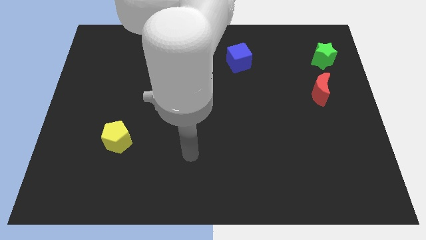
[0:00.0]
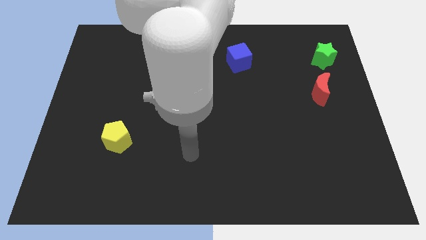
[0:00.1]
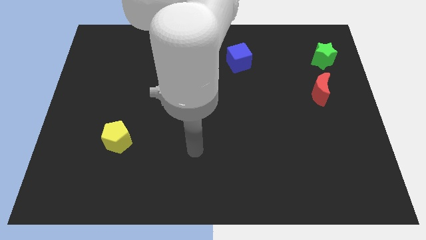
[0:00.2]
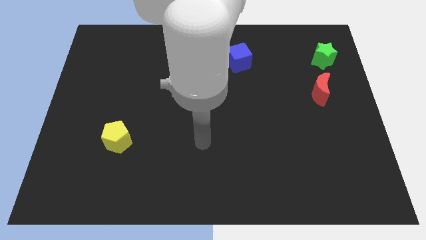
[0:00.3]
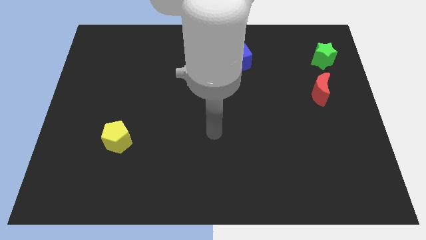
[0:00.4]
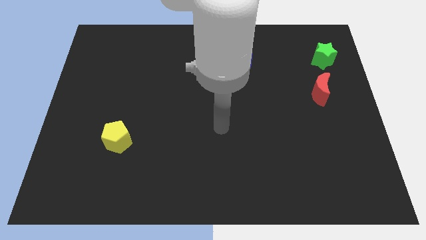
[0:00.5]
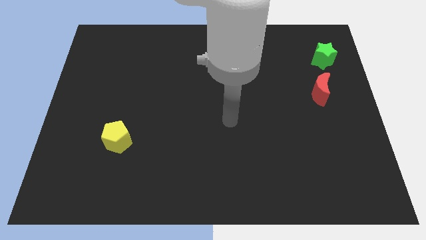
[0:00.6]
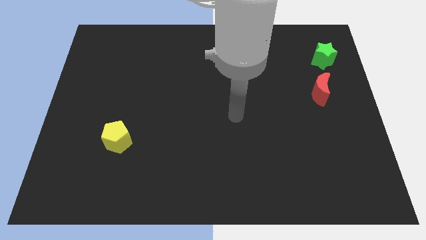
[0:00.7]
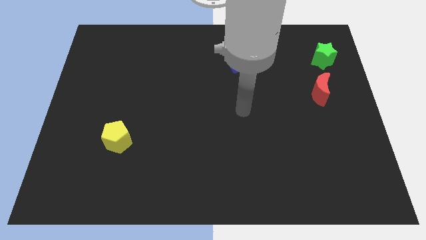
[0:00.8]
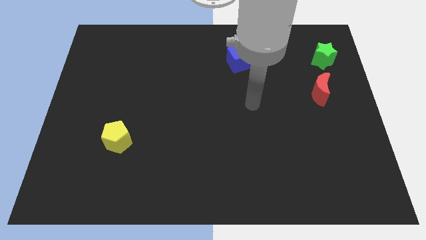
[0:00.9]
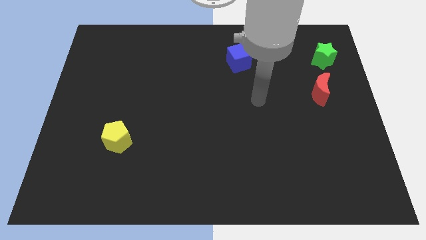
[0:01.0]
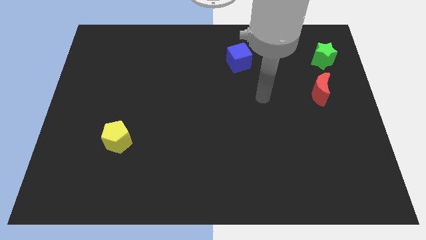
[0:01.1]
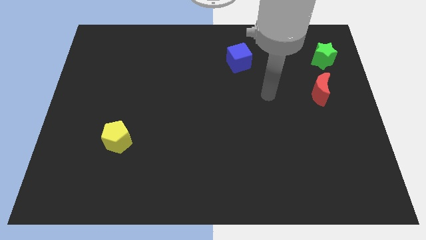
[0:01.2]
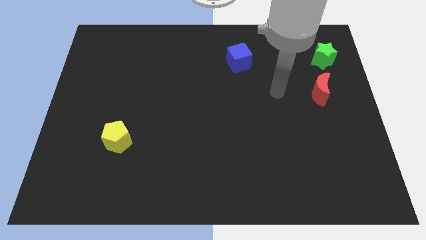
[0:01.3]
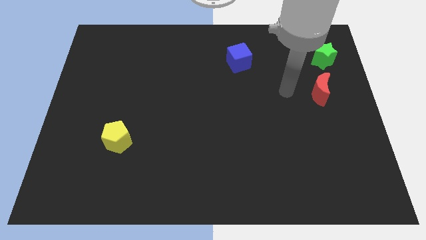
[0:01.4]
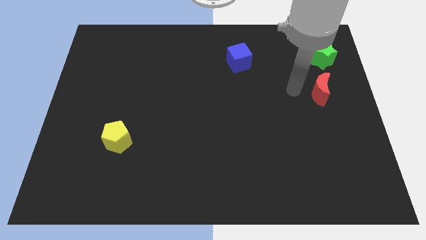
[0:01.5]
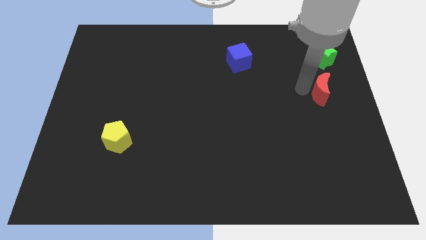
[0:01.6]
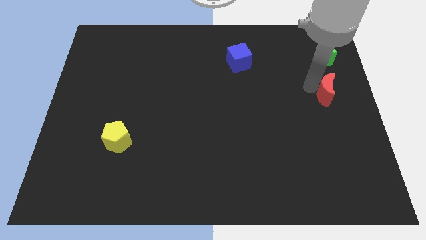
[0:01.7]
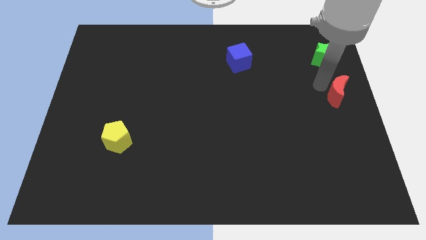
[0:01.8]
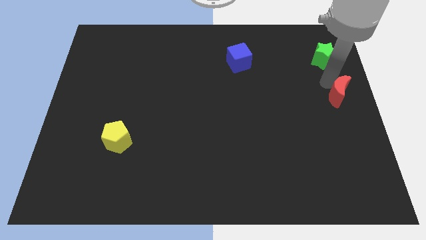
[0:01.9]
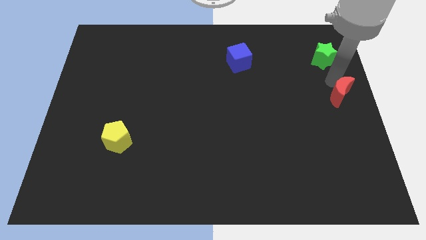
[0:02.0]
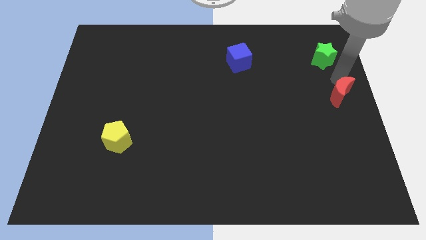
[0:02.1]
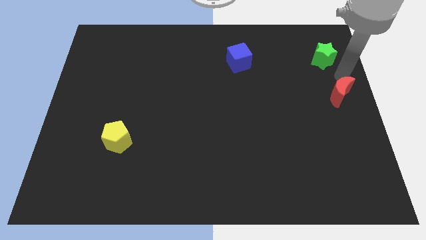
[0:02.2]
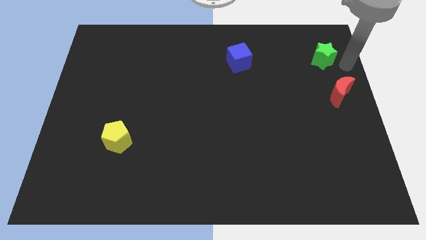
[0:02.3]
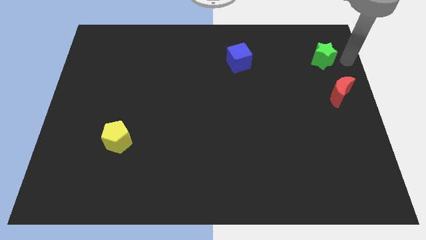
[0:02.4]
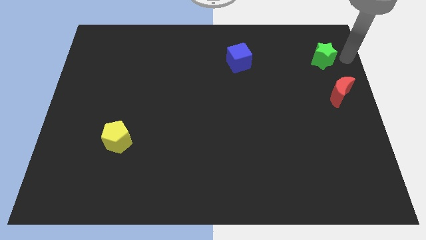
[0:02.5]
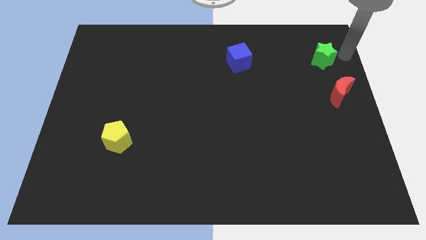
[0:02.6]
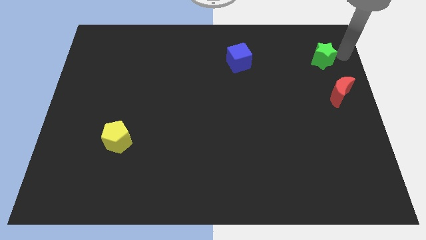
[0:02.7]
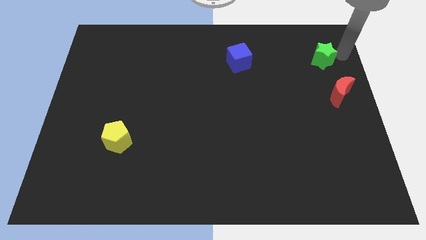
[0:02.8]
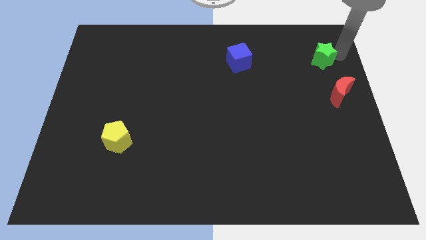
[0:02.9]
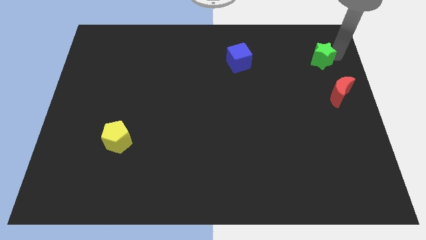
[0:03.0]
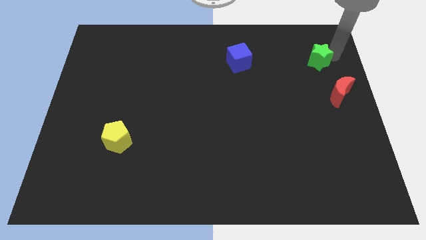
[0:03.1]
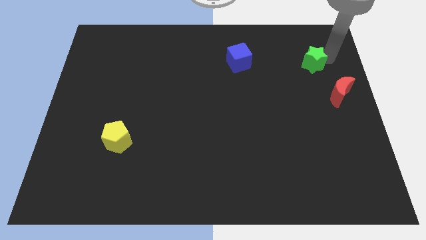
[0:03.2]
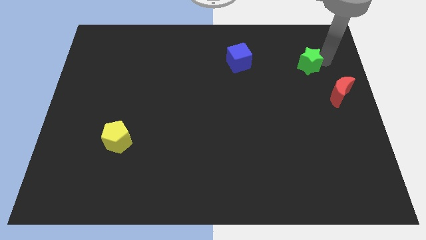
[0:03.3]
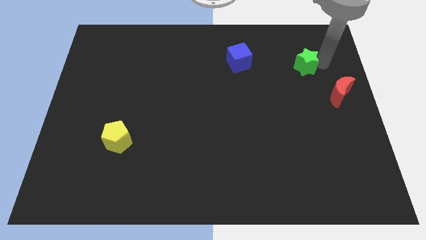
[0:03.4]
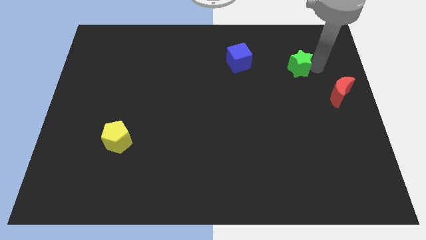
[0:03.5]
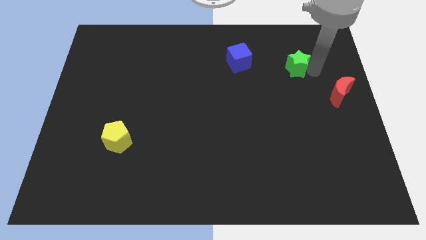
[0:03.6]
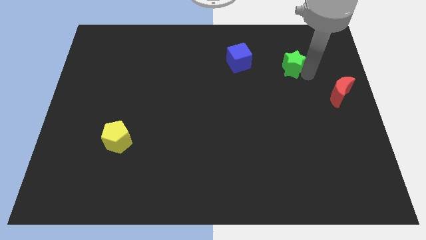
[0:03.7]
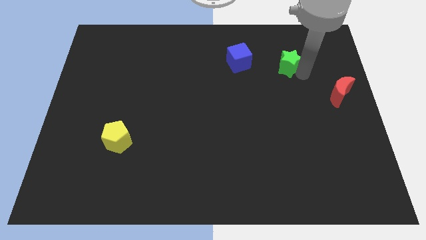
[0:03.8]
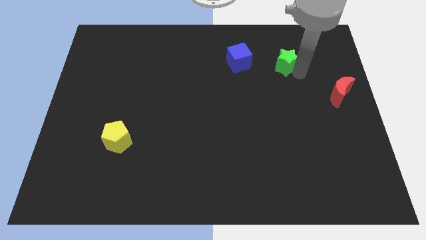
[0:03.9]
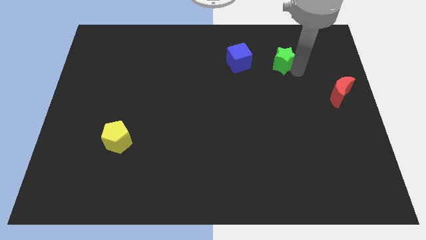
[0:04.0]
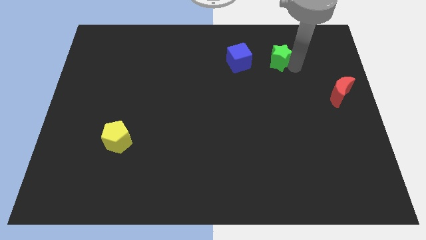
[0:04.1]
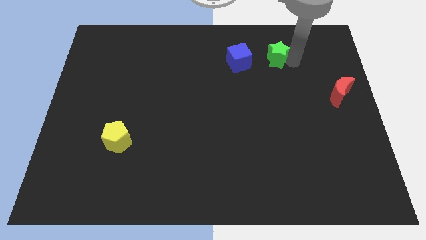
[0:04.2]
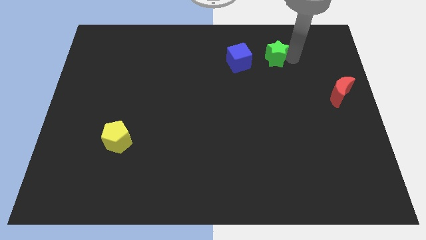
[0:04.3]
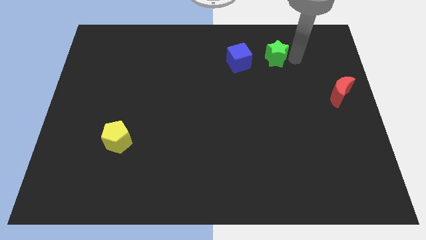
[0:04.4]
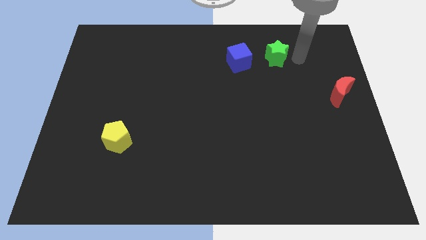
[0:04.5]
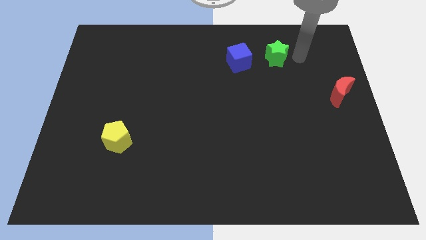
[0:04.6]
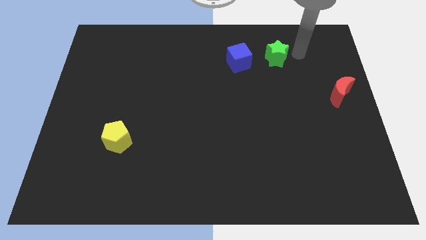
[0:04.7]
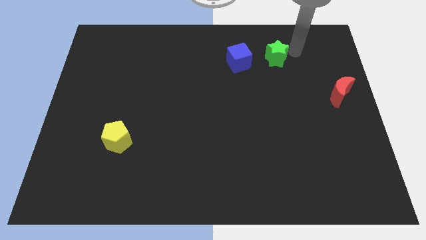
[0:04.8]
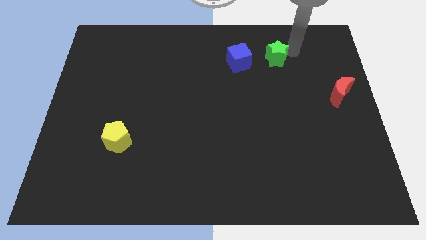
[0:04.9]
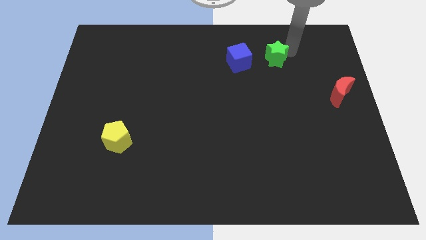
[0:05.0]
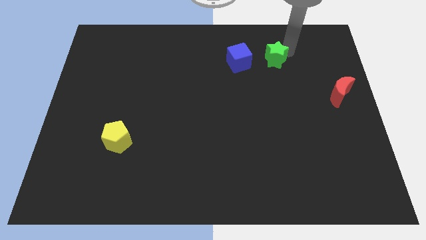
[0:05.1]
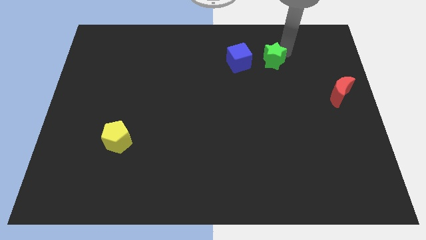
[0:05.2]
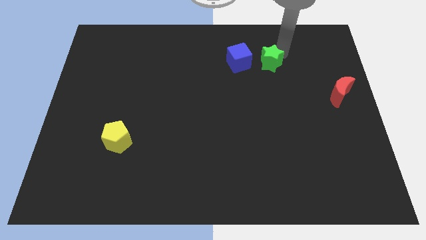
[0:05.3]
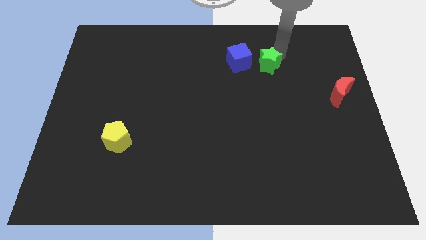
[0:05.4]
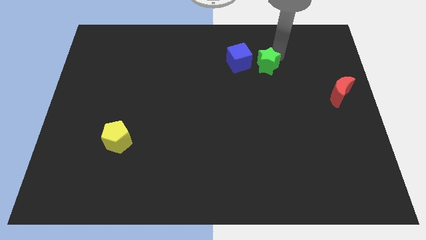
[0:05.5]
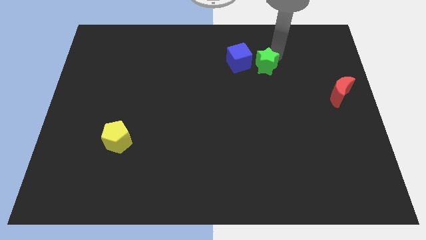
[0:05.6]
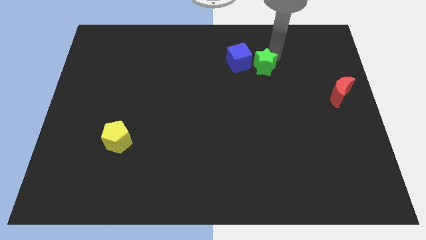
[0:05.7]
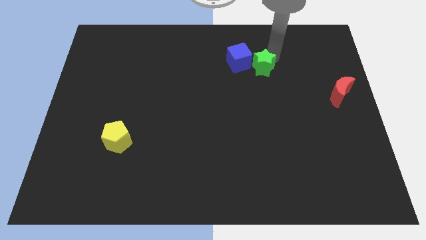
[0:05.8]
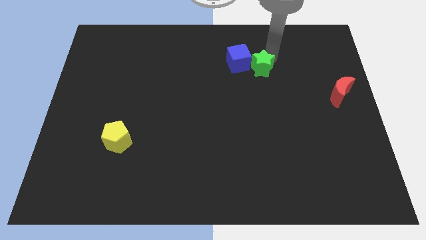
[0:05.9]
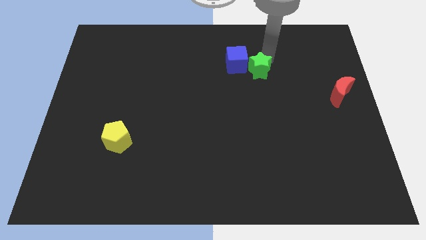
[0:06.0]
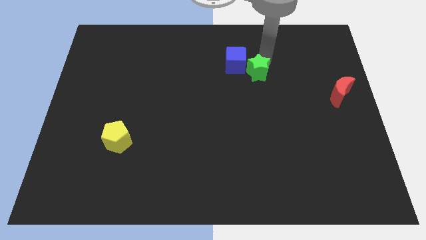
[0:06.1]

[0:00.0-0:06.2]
push the green star to the blue cube

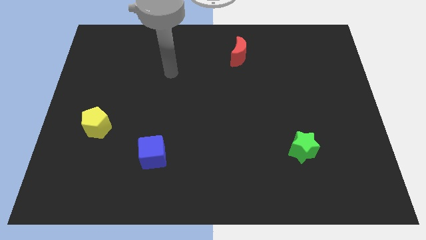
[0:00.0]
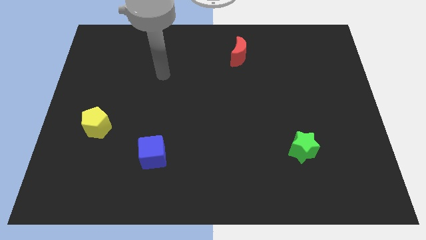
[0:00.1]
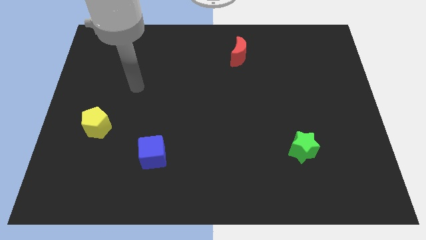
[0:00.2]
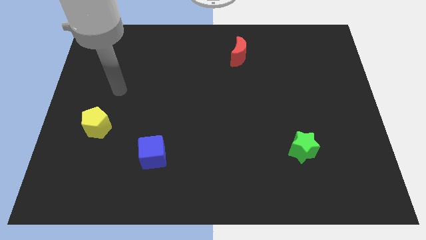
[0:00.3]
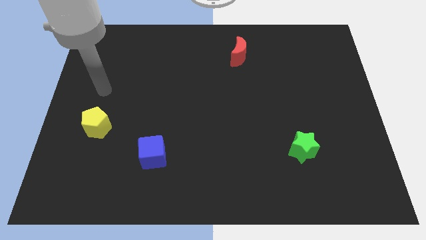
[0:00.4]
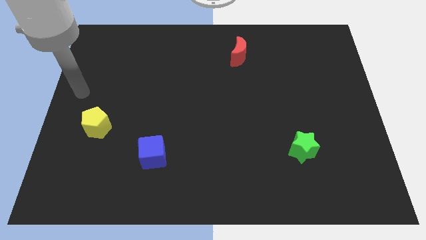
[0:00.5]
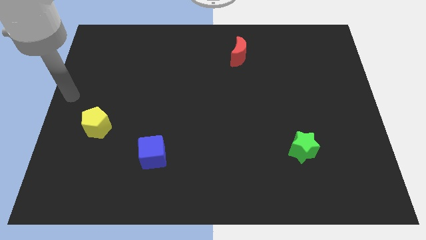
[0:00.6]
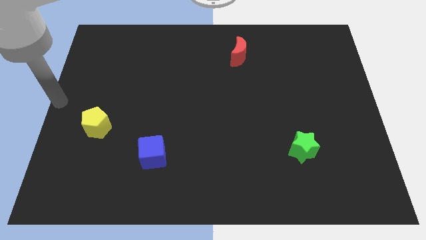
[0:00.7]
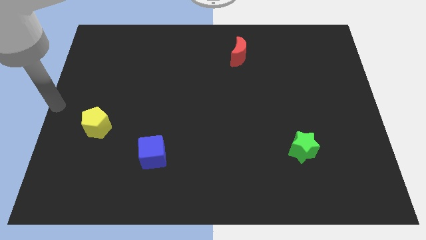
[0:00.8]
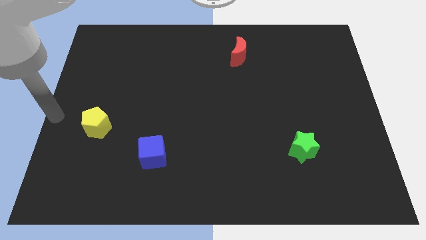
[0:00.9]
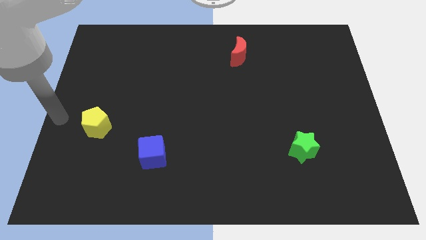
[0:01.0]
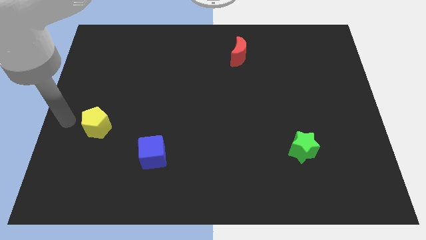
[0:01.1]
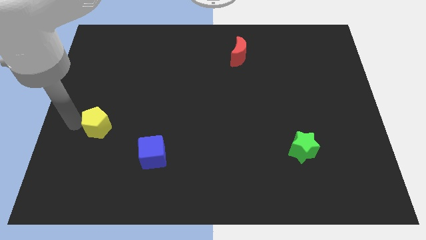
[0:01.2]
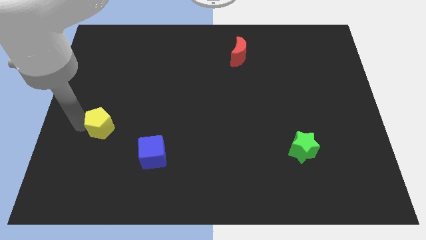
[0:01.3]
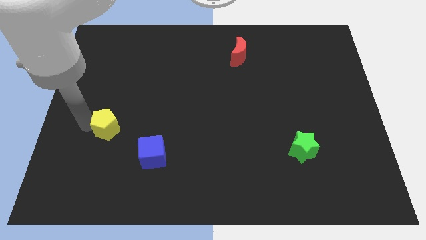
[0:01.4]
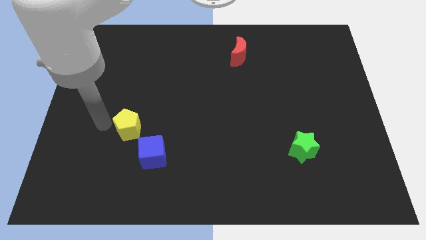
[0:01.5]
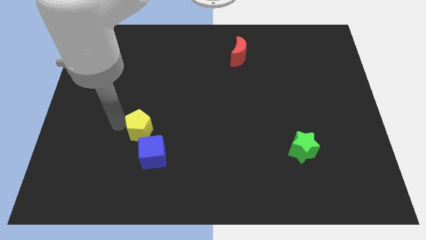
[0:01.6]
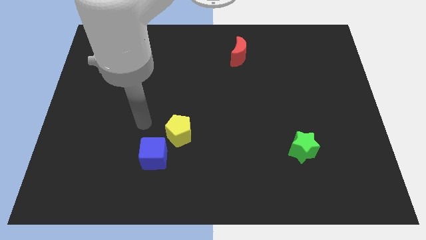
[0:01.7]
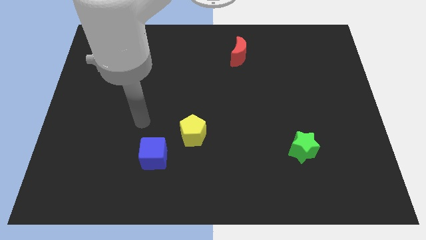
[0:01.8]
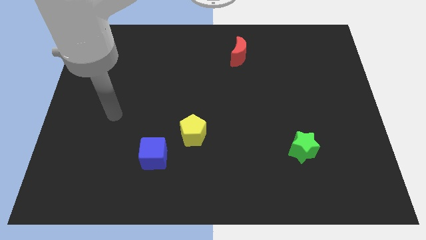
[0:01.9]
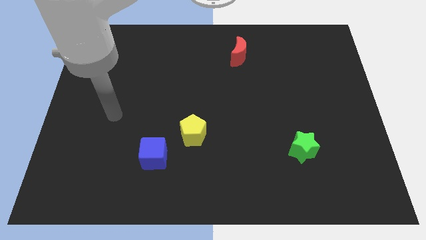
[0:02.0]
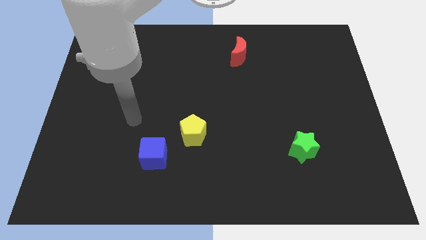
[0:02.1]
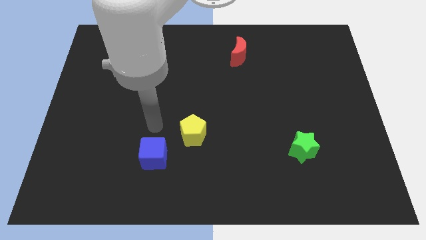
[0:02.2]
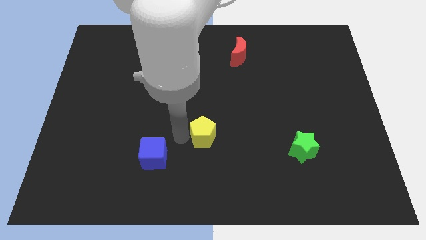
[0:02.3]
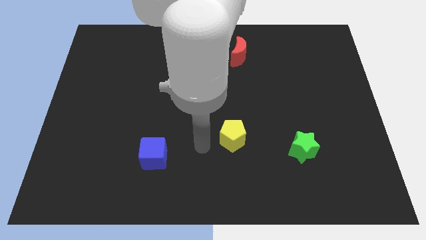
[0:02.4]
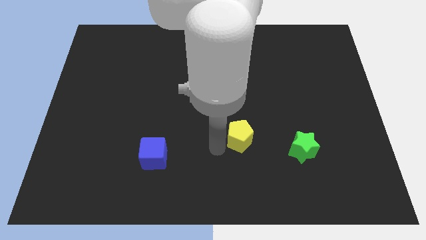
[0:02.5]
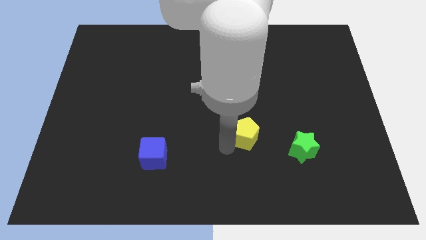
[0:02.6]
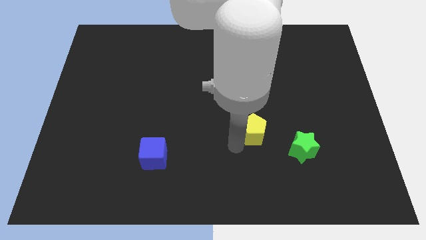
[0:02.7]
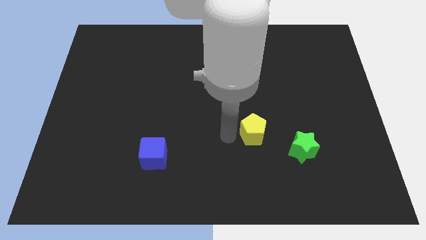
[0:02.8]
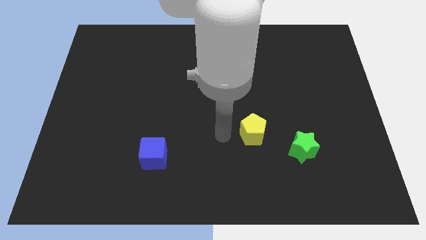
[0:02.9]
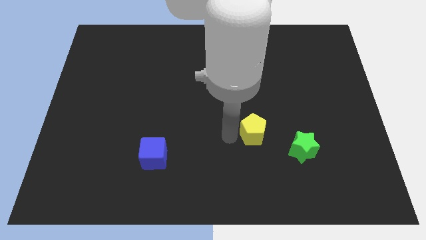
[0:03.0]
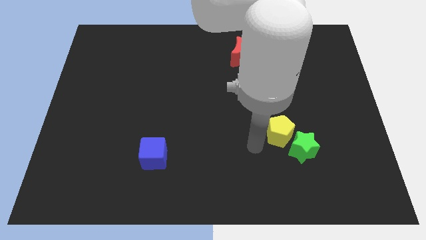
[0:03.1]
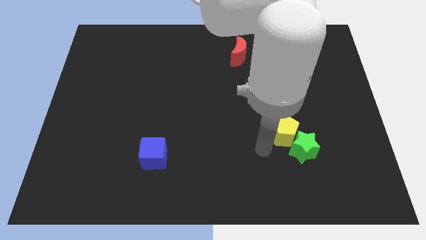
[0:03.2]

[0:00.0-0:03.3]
move the yellow pentagon close to the star
